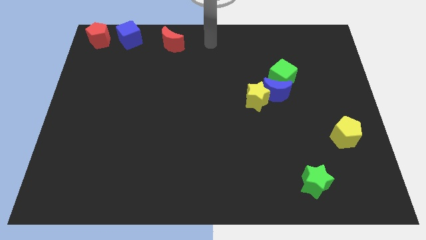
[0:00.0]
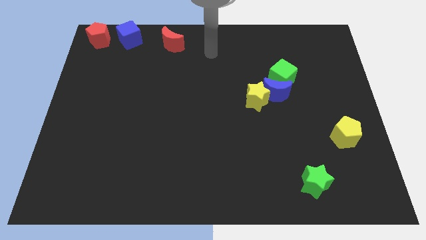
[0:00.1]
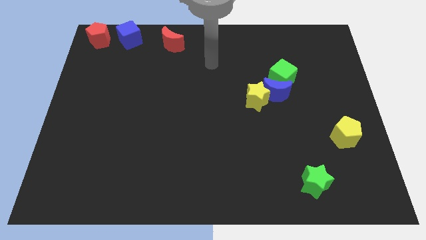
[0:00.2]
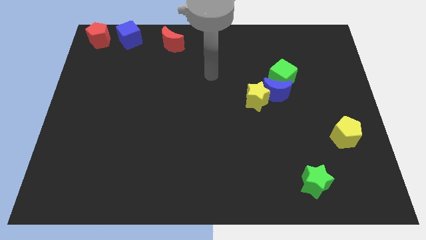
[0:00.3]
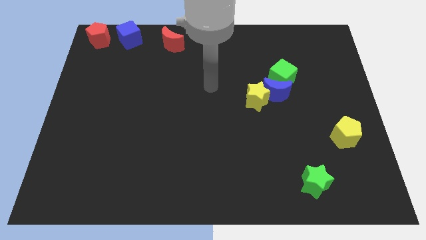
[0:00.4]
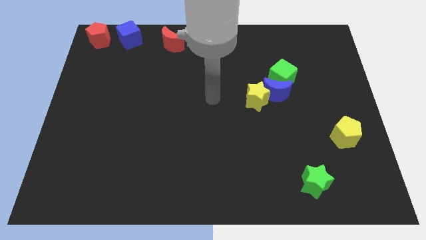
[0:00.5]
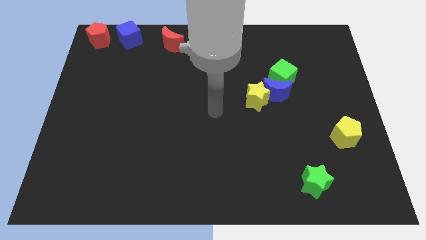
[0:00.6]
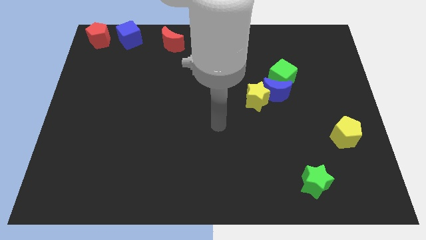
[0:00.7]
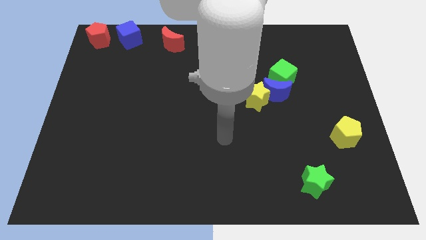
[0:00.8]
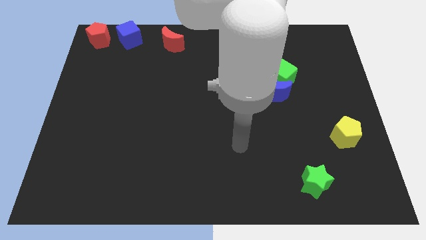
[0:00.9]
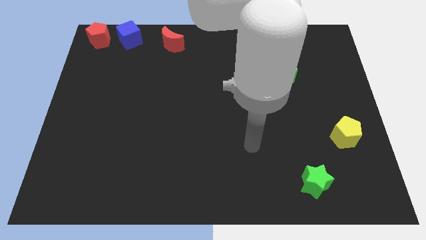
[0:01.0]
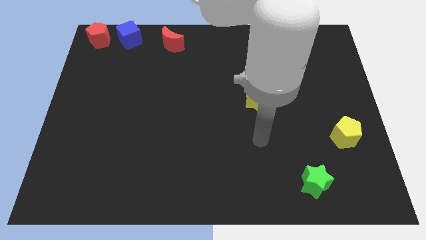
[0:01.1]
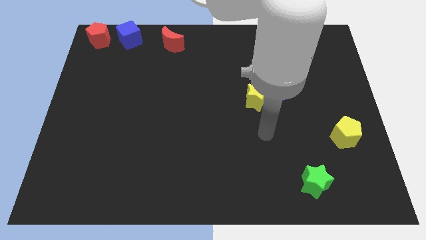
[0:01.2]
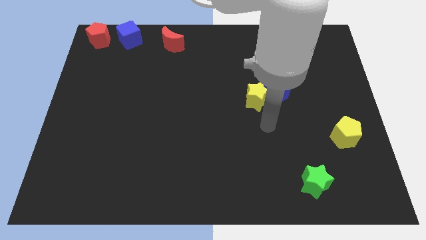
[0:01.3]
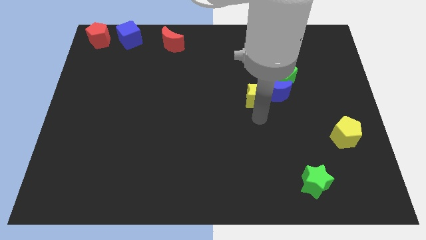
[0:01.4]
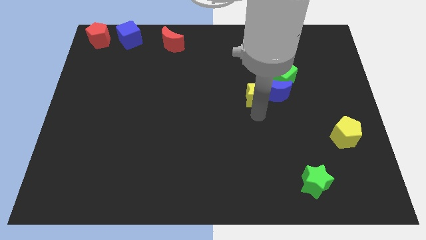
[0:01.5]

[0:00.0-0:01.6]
tap the yellow star

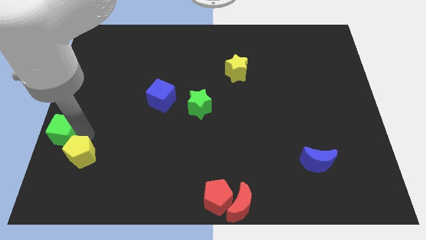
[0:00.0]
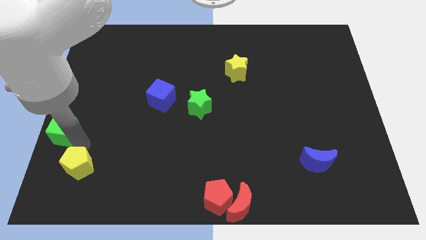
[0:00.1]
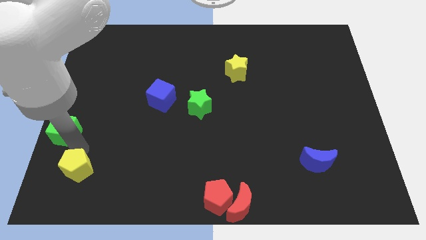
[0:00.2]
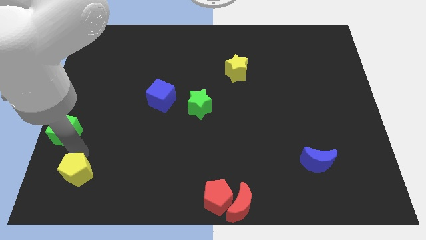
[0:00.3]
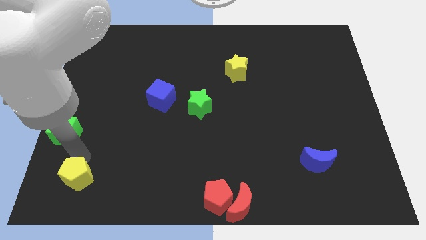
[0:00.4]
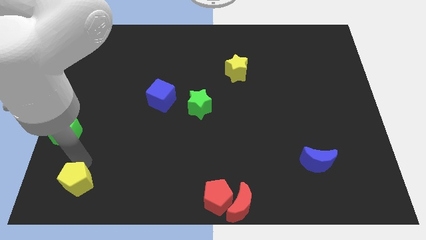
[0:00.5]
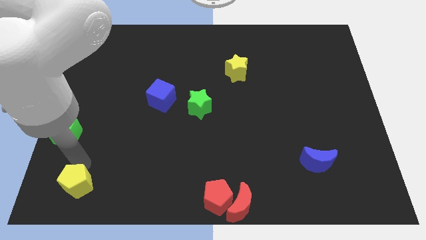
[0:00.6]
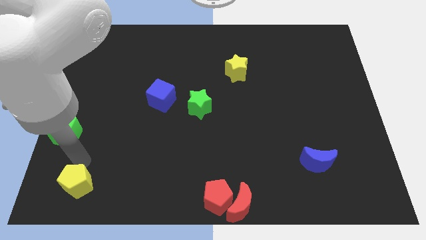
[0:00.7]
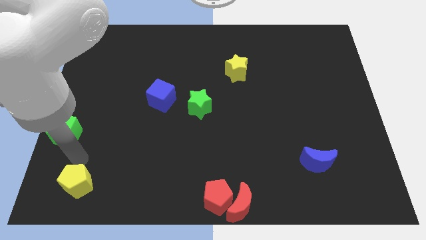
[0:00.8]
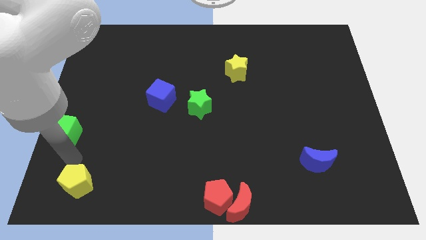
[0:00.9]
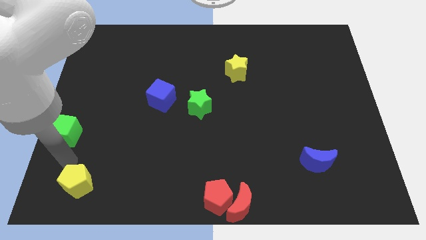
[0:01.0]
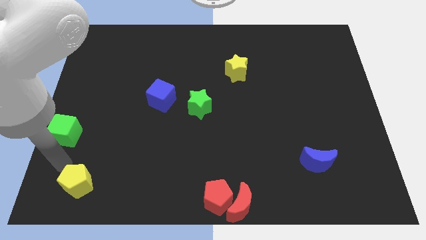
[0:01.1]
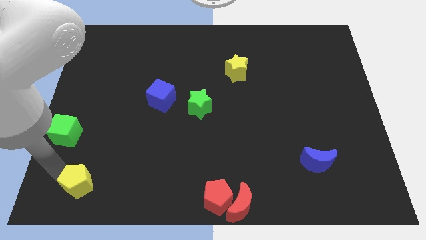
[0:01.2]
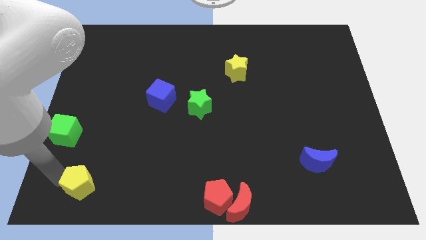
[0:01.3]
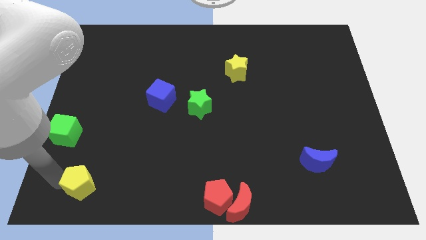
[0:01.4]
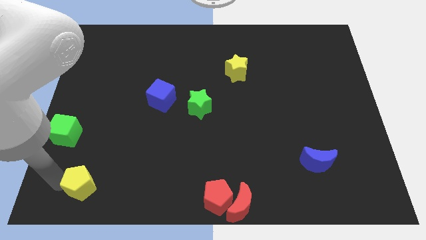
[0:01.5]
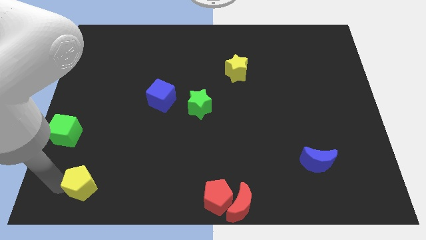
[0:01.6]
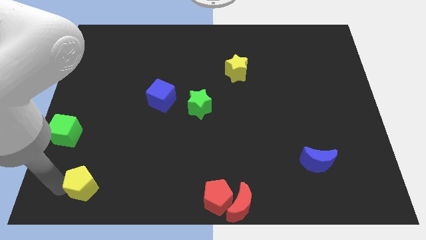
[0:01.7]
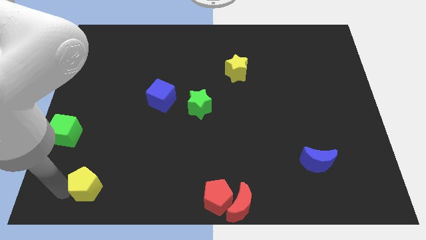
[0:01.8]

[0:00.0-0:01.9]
move the yellow pentagon to the bottom of the board

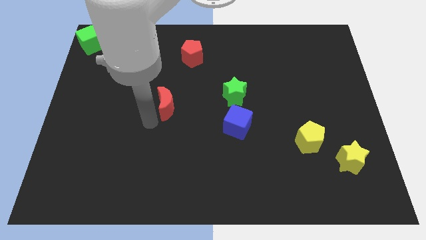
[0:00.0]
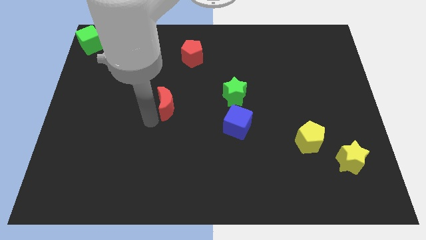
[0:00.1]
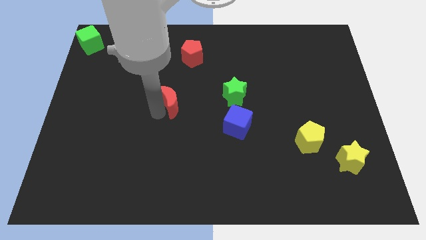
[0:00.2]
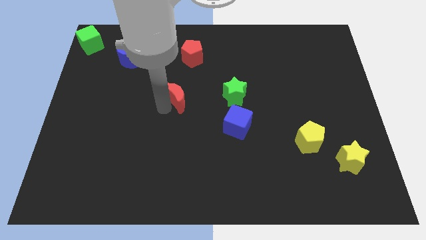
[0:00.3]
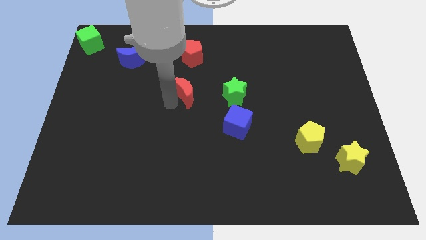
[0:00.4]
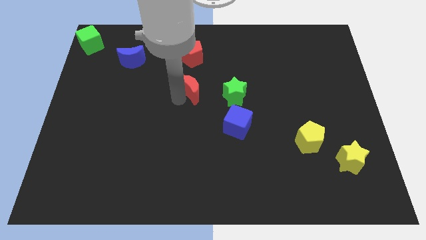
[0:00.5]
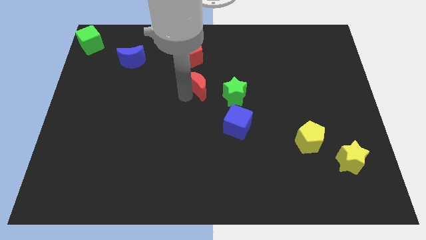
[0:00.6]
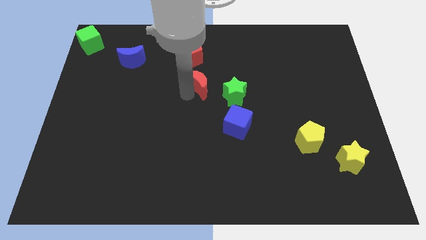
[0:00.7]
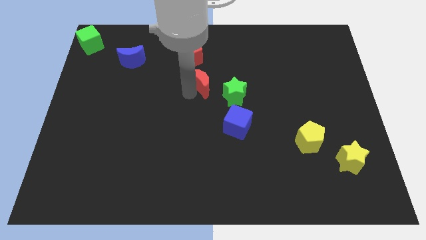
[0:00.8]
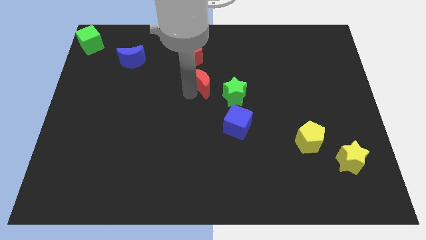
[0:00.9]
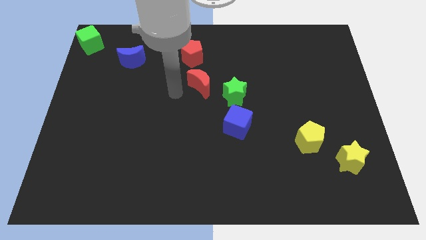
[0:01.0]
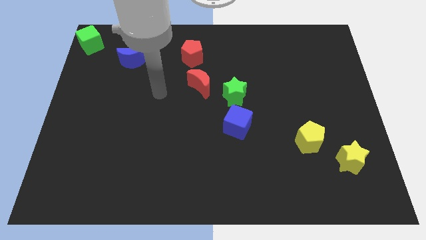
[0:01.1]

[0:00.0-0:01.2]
put the red moon below red pentagon

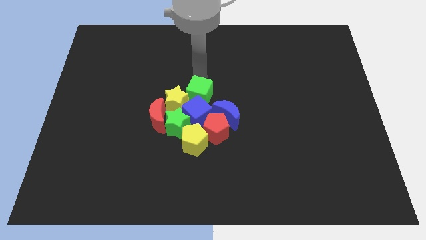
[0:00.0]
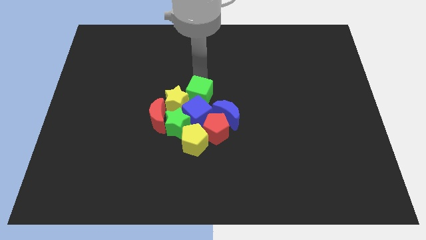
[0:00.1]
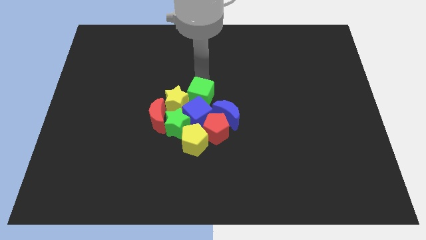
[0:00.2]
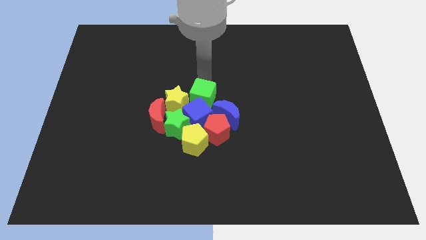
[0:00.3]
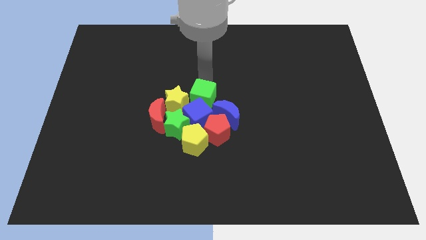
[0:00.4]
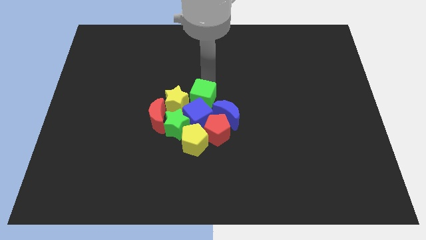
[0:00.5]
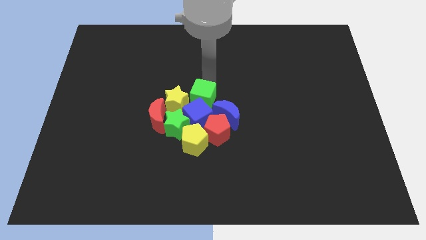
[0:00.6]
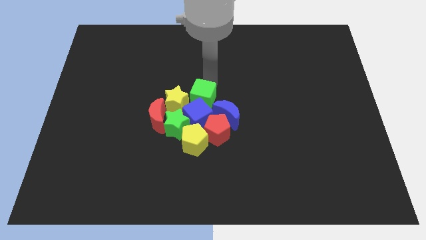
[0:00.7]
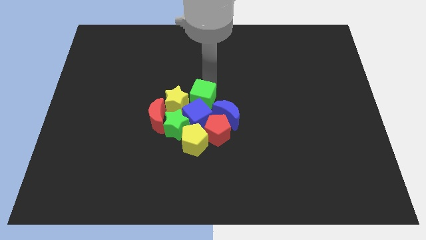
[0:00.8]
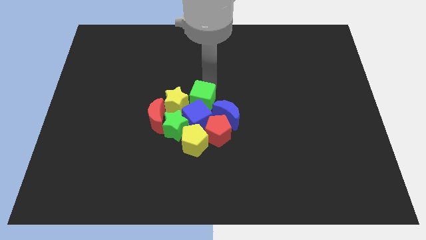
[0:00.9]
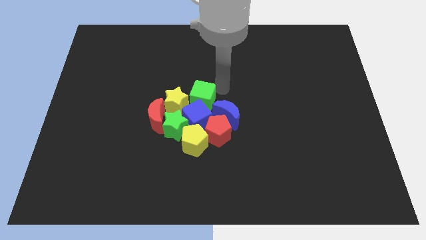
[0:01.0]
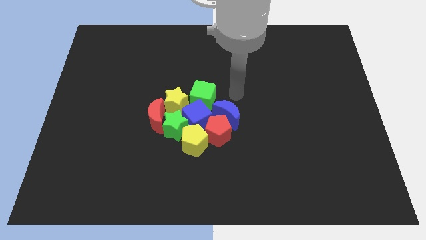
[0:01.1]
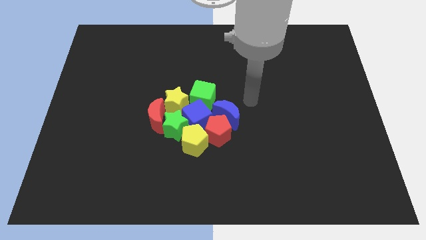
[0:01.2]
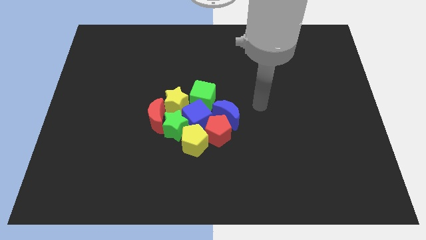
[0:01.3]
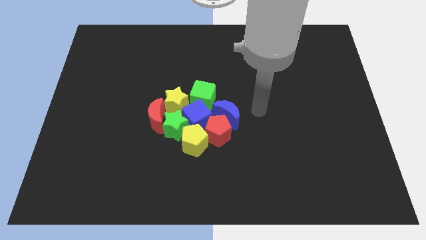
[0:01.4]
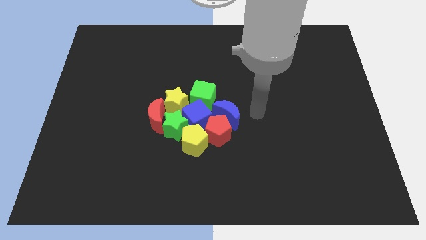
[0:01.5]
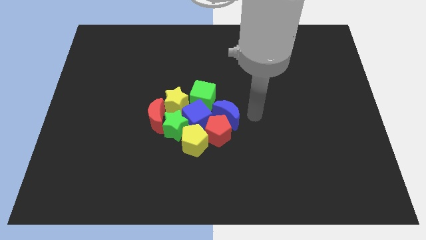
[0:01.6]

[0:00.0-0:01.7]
move your arm away from the green cube

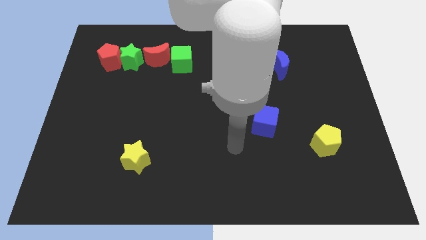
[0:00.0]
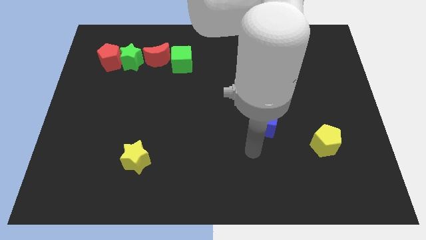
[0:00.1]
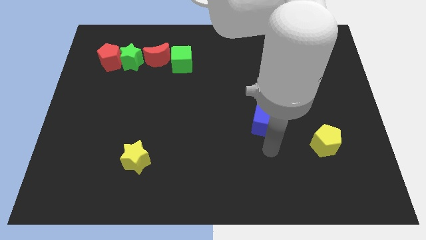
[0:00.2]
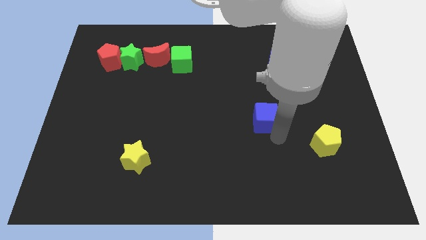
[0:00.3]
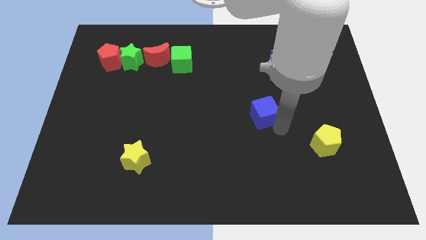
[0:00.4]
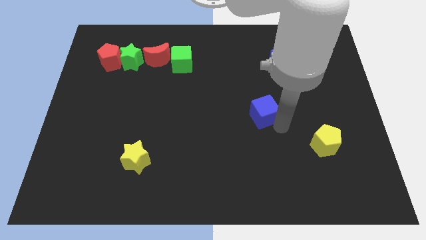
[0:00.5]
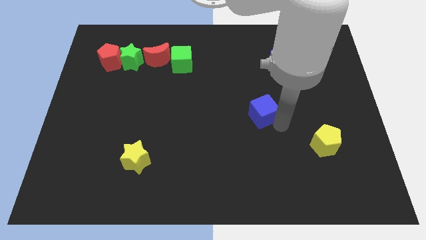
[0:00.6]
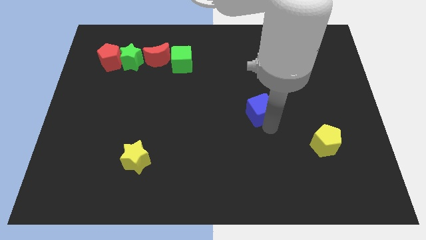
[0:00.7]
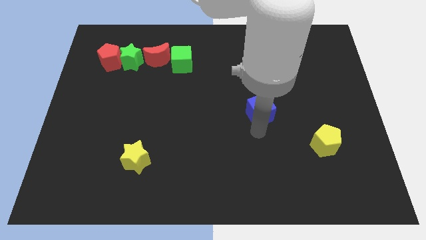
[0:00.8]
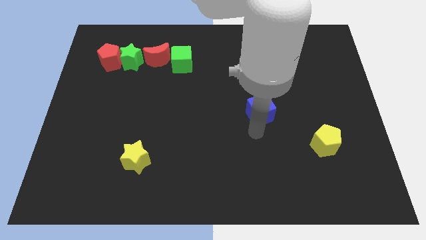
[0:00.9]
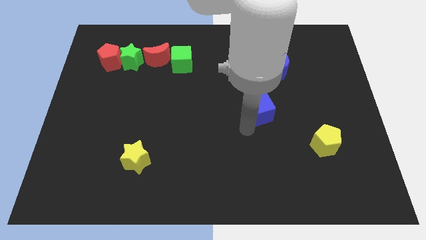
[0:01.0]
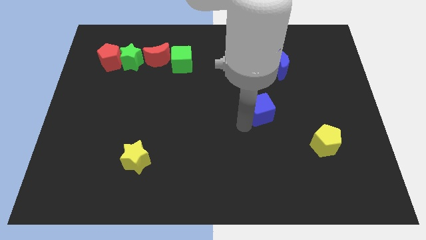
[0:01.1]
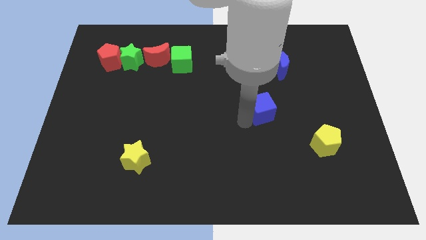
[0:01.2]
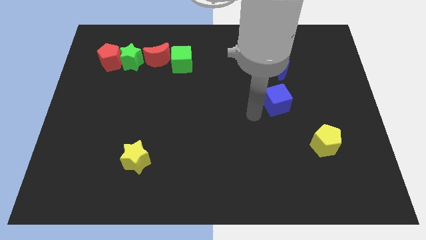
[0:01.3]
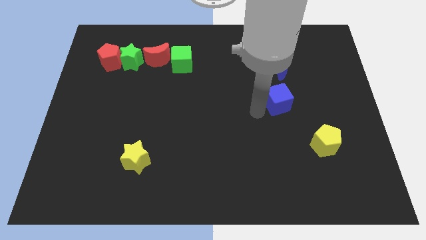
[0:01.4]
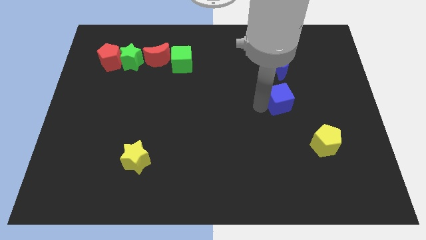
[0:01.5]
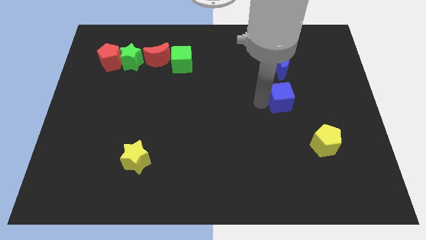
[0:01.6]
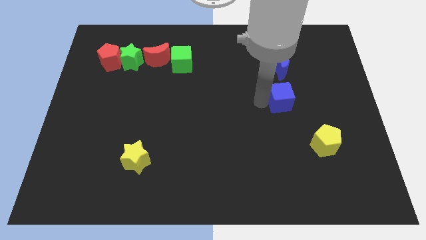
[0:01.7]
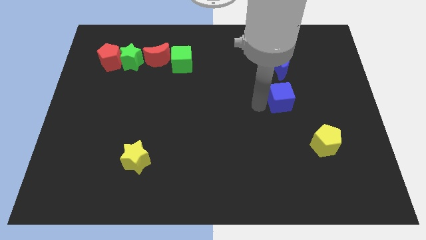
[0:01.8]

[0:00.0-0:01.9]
push the blue cube close to the blue moon

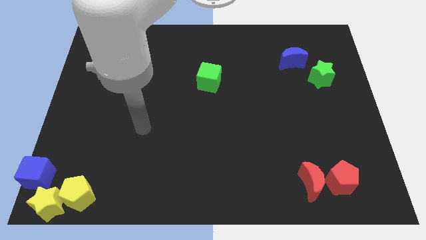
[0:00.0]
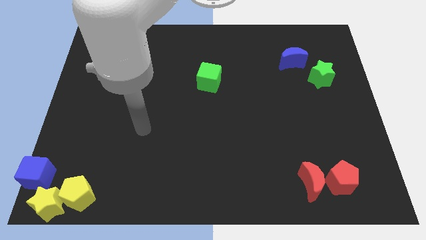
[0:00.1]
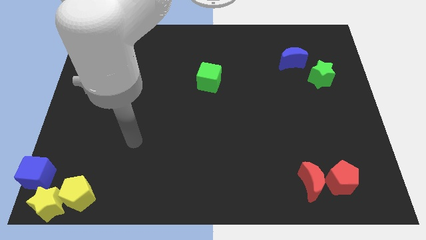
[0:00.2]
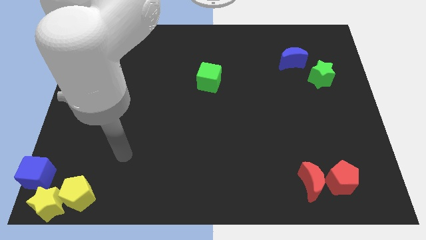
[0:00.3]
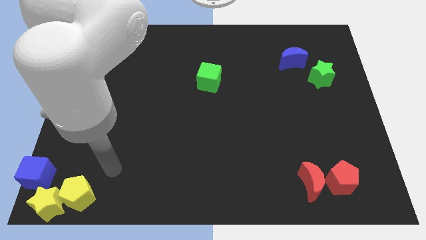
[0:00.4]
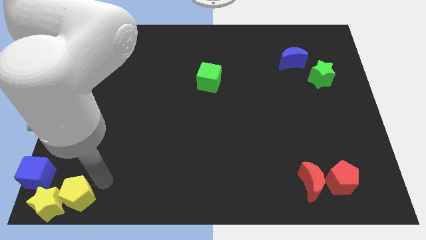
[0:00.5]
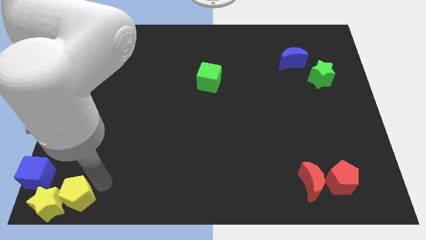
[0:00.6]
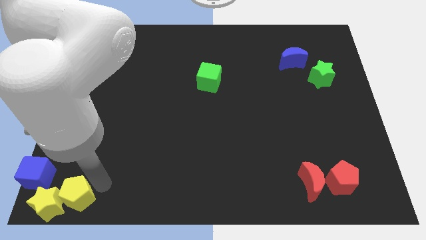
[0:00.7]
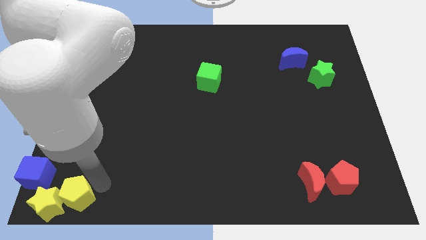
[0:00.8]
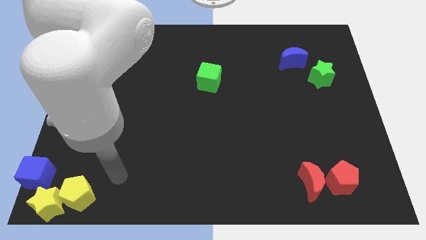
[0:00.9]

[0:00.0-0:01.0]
place arm above yellow pentagon
